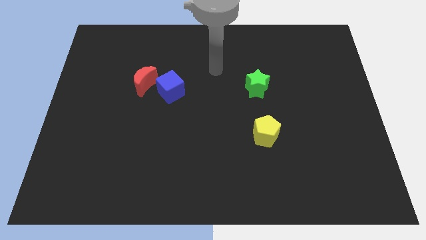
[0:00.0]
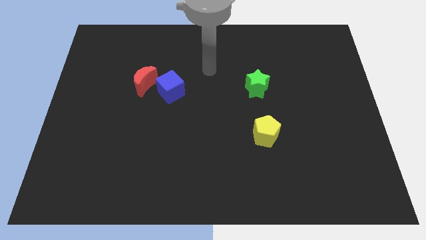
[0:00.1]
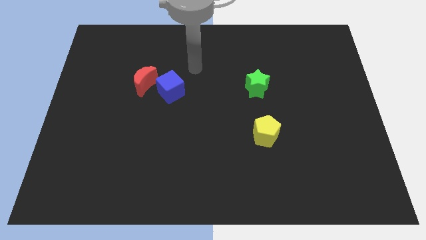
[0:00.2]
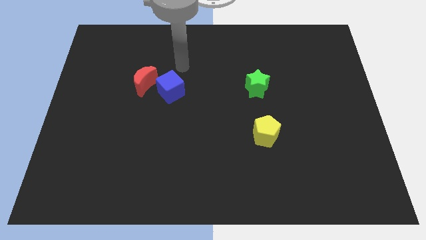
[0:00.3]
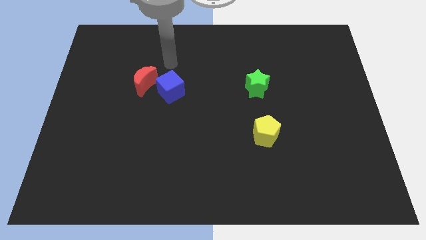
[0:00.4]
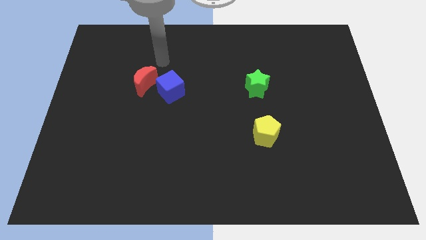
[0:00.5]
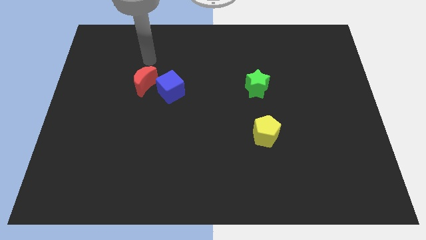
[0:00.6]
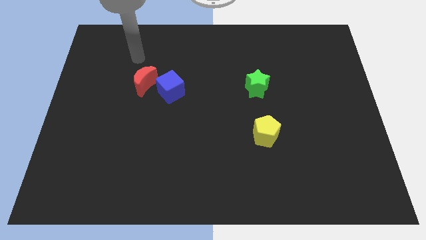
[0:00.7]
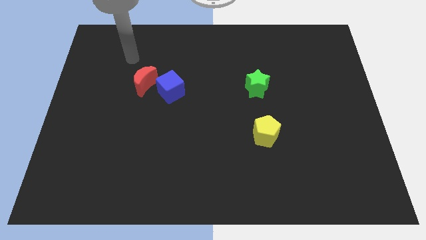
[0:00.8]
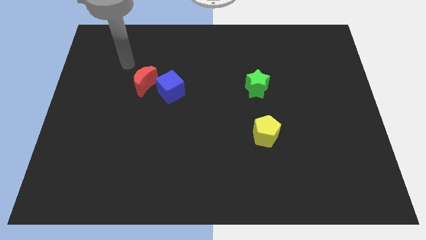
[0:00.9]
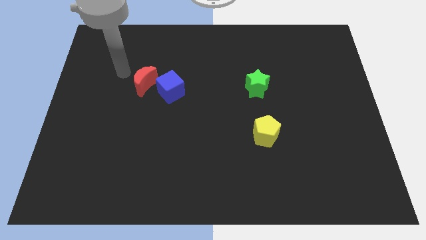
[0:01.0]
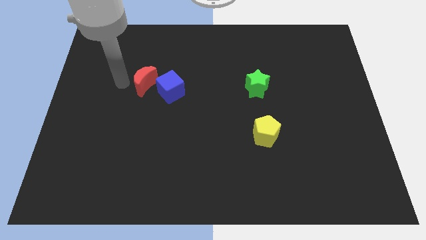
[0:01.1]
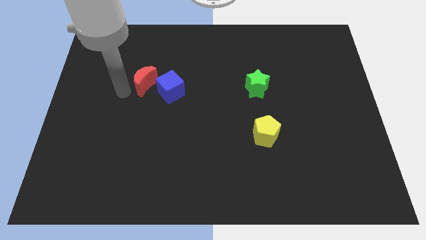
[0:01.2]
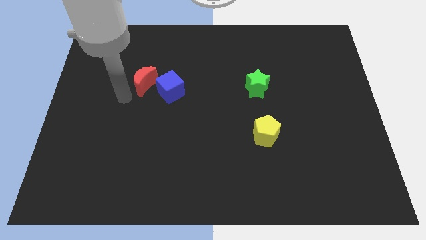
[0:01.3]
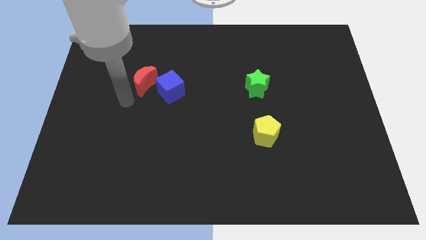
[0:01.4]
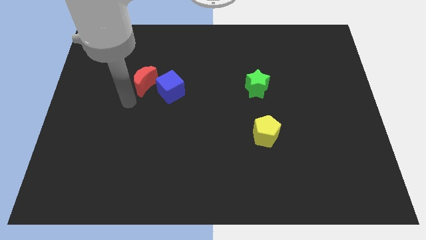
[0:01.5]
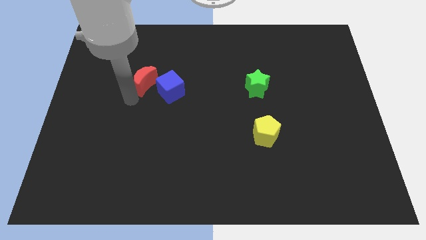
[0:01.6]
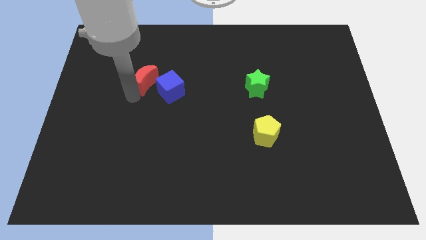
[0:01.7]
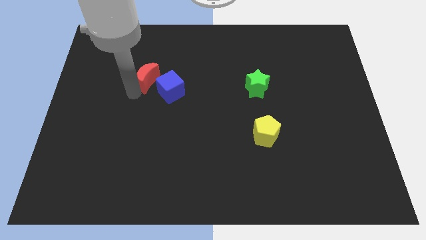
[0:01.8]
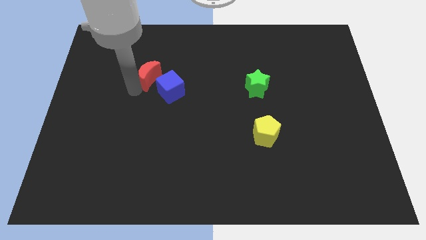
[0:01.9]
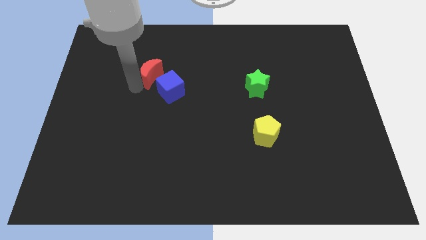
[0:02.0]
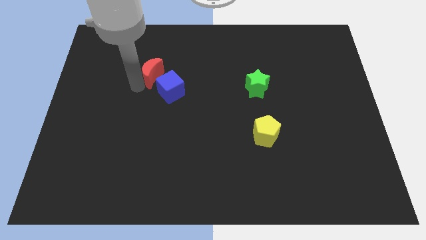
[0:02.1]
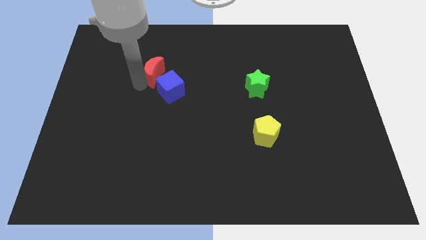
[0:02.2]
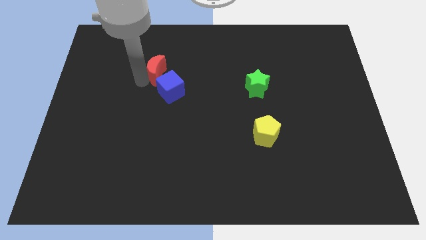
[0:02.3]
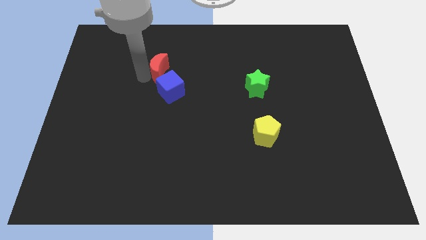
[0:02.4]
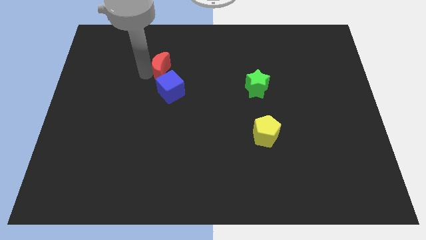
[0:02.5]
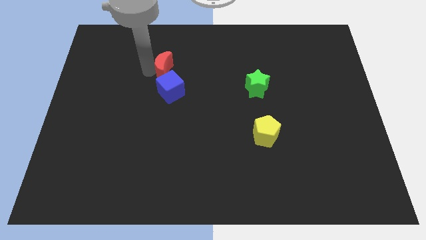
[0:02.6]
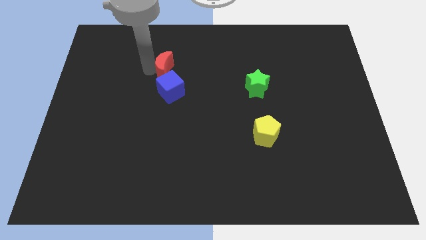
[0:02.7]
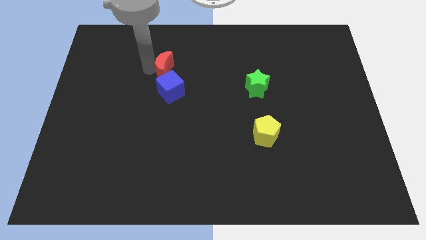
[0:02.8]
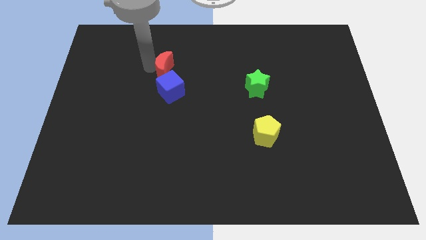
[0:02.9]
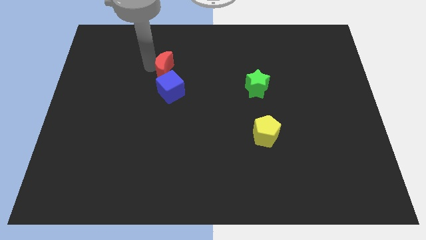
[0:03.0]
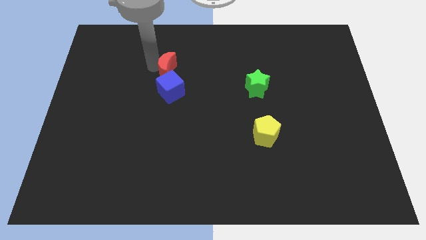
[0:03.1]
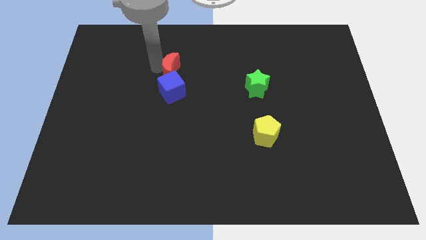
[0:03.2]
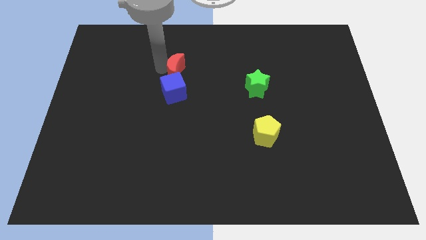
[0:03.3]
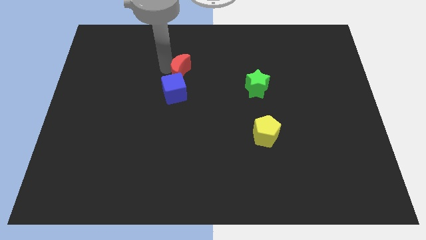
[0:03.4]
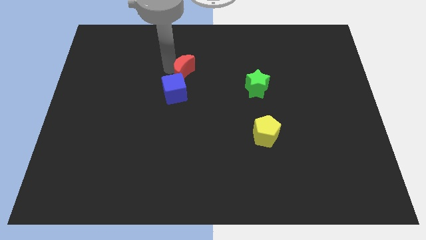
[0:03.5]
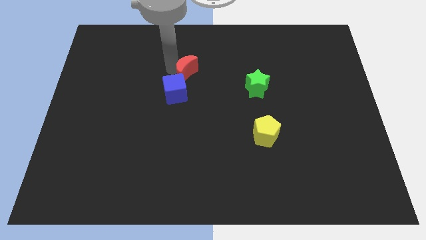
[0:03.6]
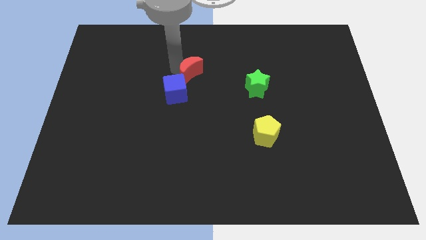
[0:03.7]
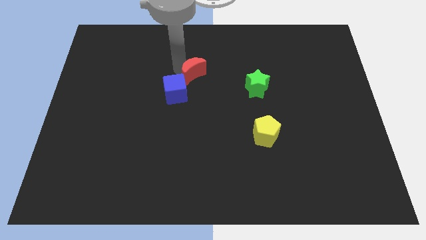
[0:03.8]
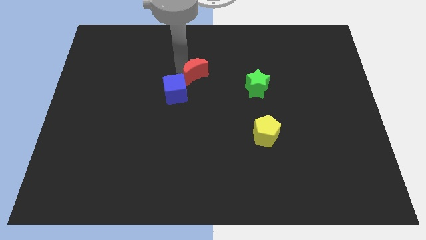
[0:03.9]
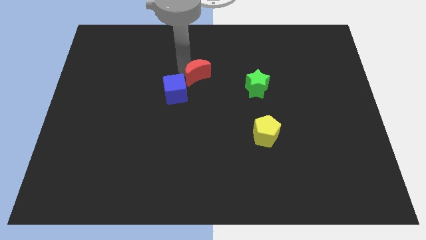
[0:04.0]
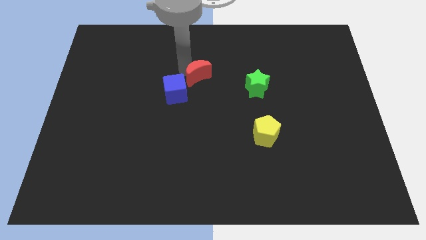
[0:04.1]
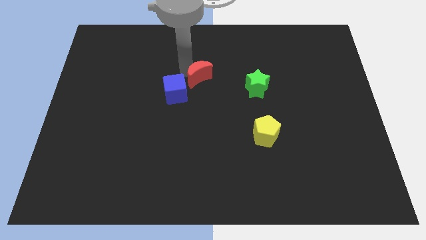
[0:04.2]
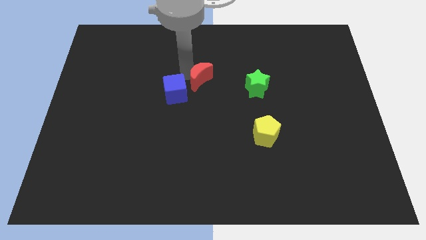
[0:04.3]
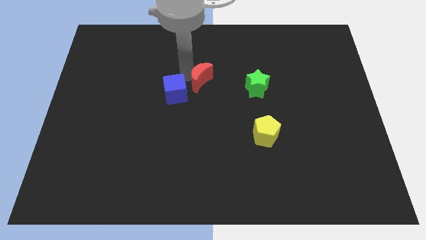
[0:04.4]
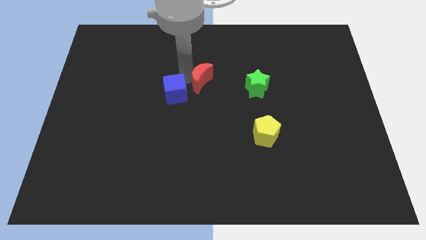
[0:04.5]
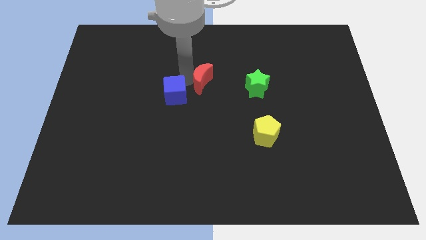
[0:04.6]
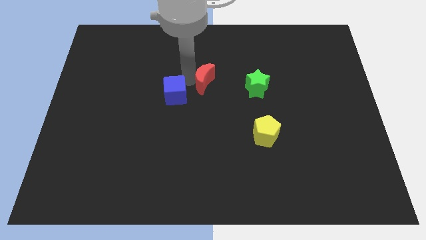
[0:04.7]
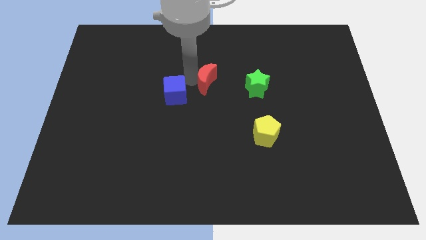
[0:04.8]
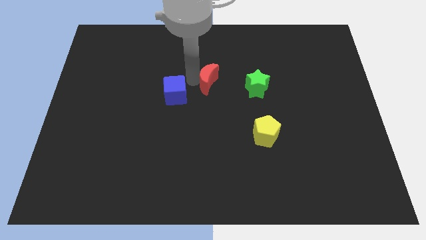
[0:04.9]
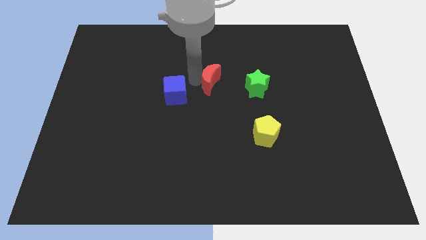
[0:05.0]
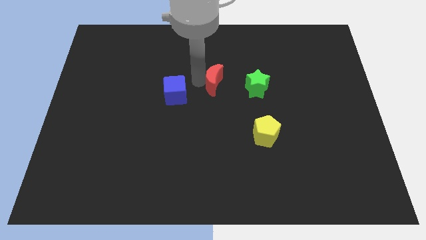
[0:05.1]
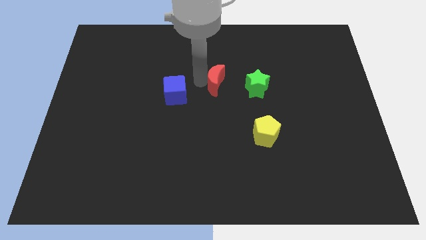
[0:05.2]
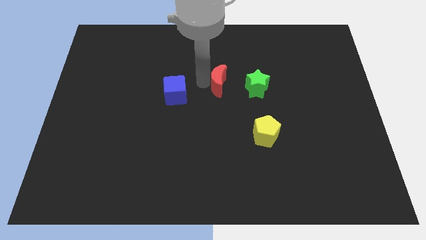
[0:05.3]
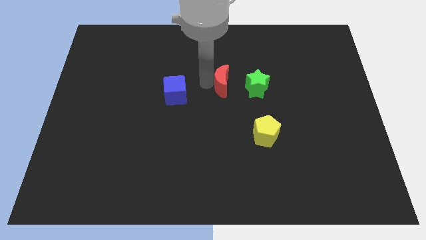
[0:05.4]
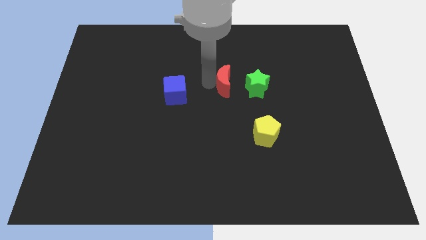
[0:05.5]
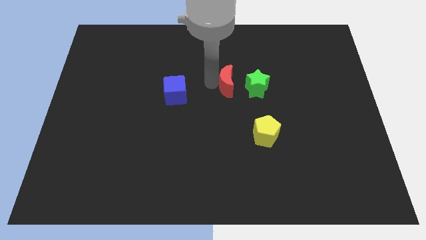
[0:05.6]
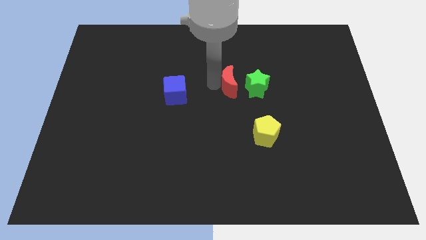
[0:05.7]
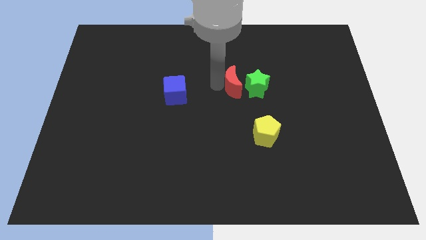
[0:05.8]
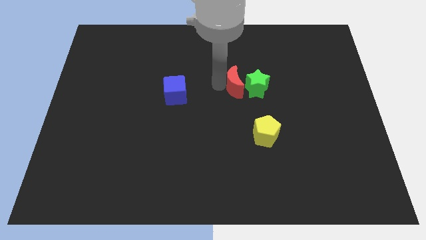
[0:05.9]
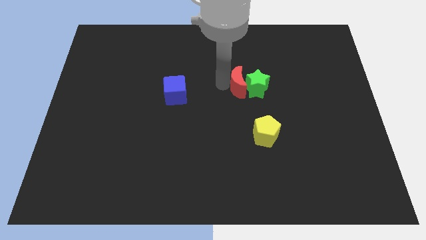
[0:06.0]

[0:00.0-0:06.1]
put the moon next to the green star

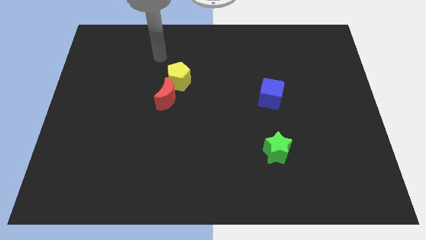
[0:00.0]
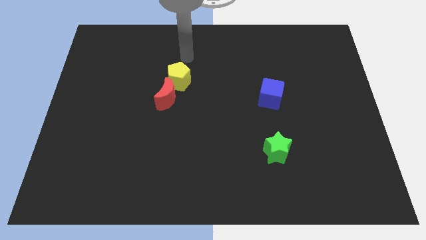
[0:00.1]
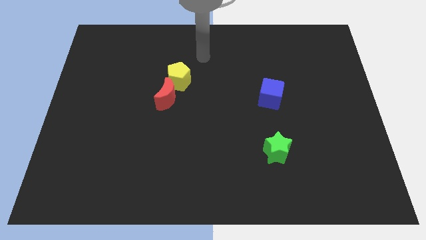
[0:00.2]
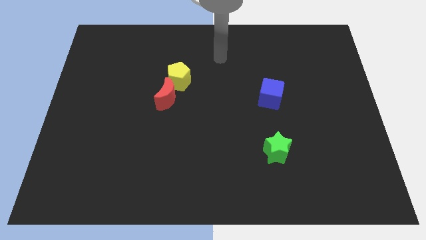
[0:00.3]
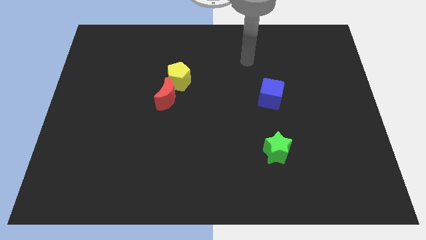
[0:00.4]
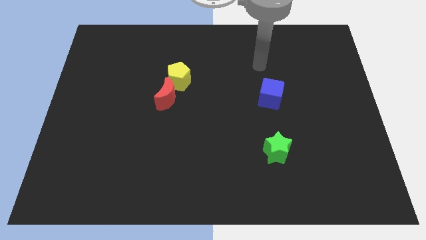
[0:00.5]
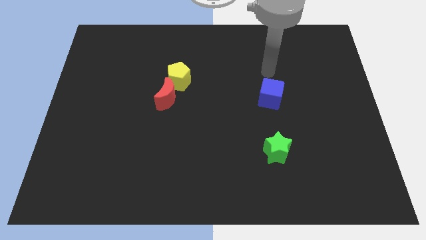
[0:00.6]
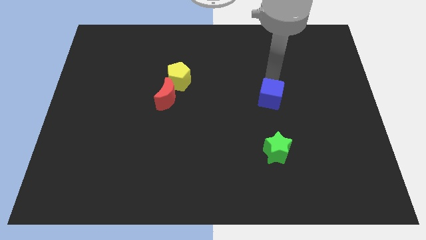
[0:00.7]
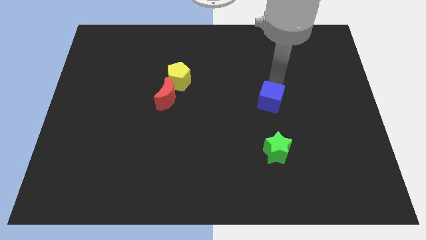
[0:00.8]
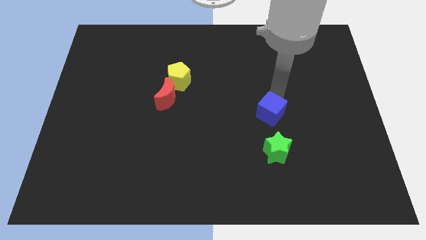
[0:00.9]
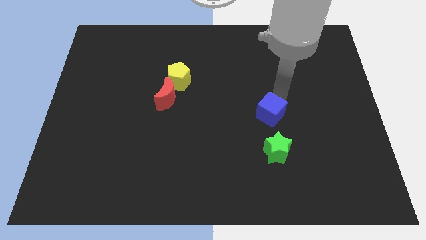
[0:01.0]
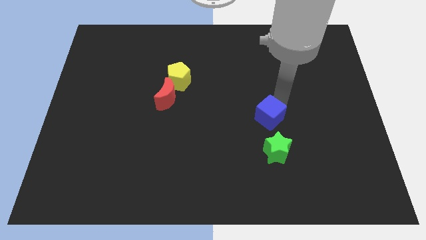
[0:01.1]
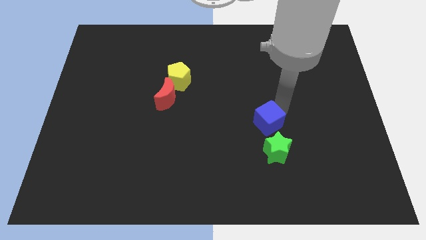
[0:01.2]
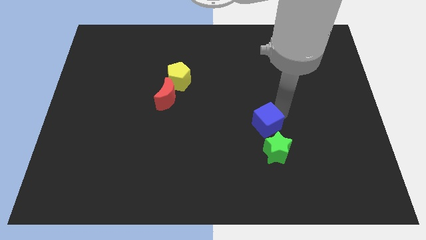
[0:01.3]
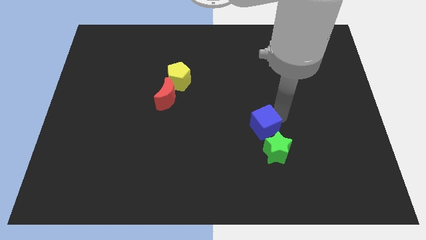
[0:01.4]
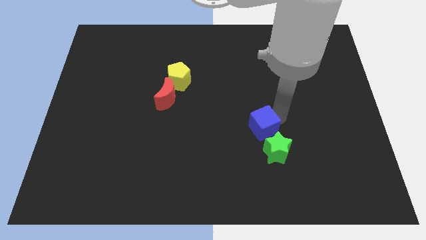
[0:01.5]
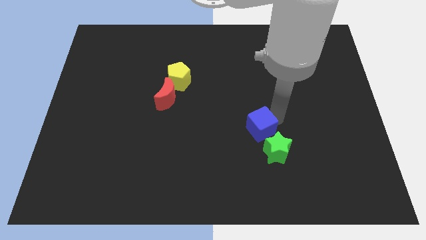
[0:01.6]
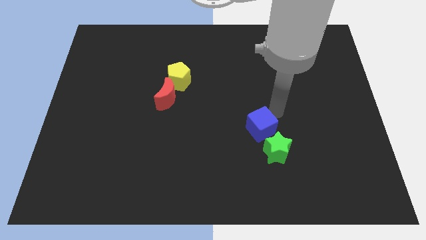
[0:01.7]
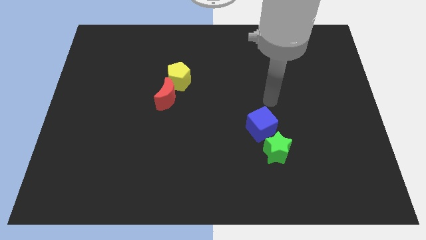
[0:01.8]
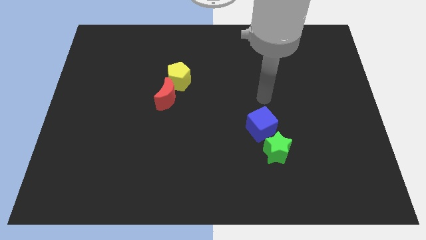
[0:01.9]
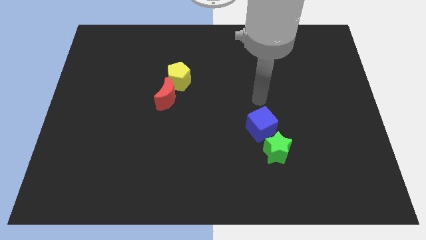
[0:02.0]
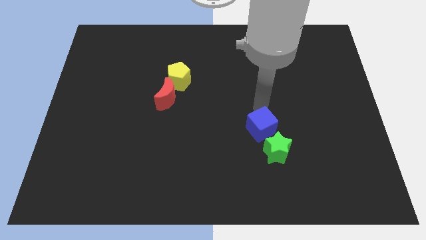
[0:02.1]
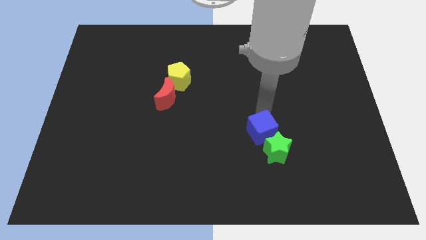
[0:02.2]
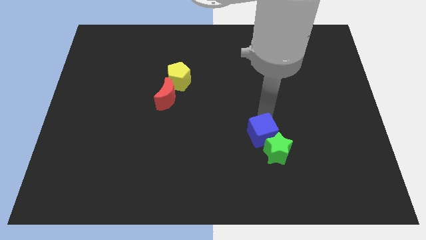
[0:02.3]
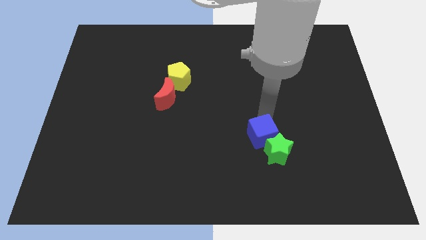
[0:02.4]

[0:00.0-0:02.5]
move the cube to the green star
